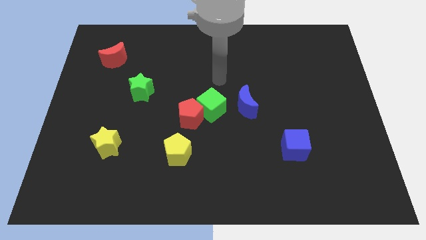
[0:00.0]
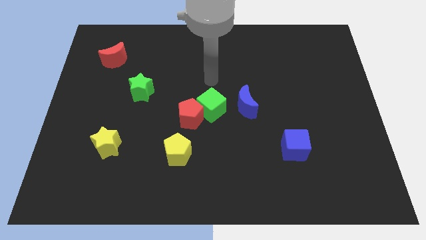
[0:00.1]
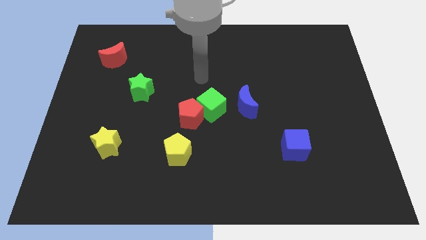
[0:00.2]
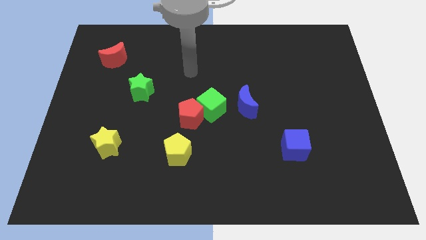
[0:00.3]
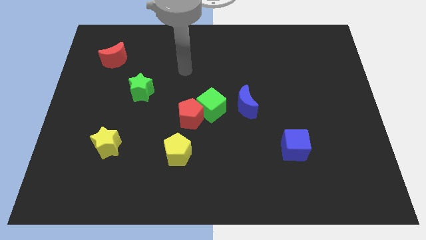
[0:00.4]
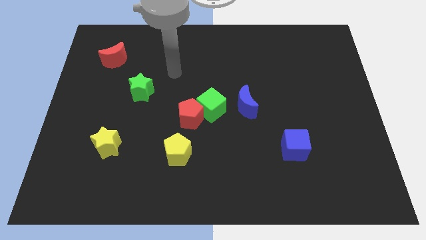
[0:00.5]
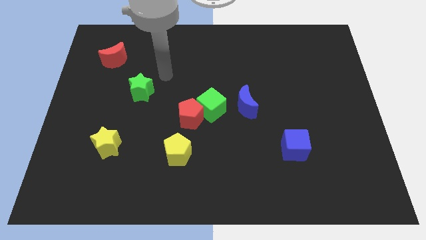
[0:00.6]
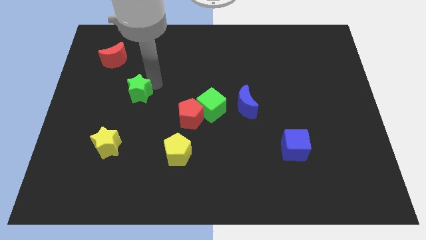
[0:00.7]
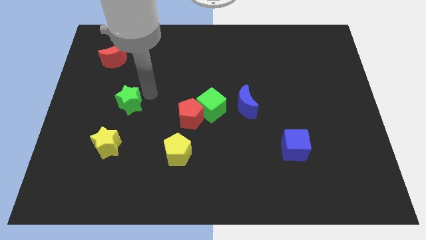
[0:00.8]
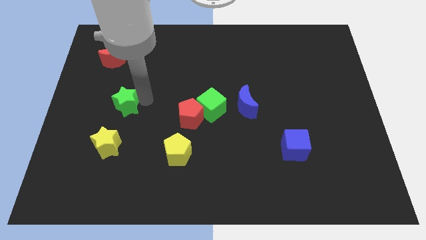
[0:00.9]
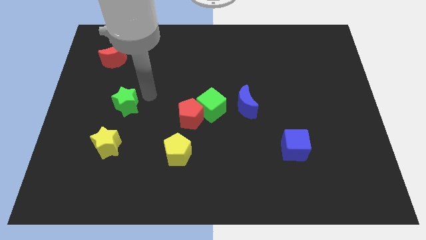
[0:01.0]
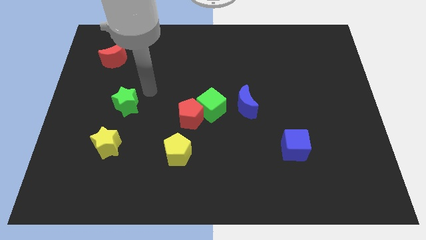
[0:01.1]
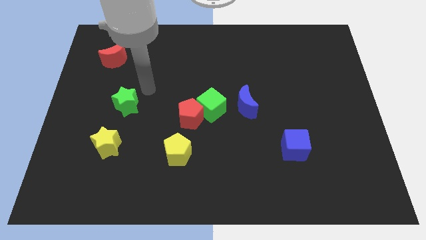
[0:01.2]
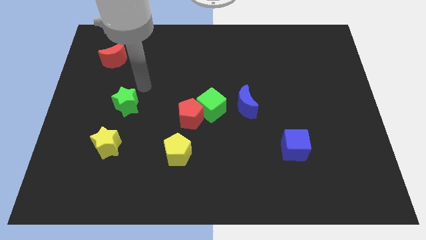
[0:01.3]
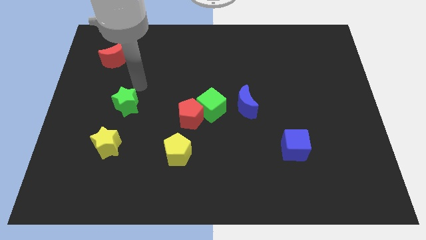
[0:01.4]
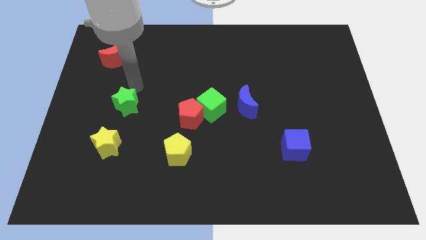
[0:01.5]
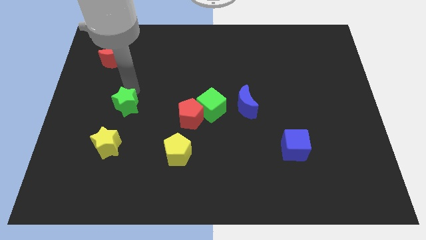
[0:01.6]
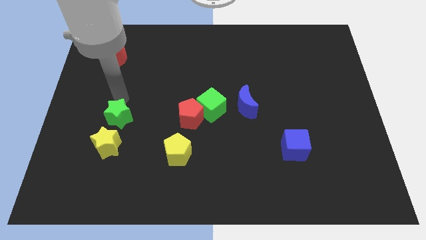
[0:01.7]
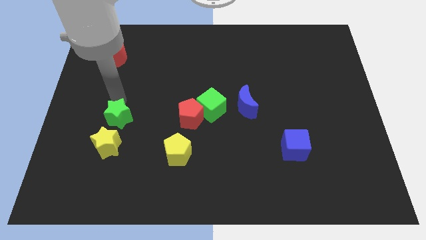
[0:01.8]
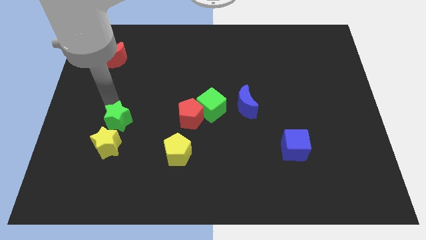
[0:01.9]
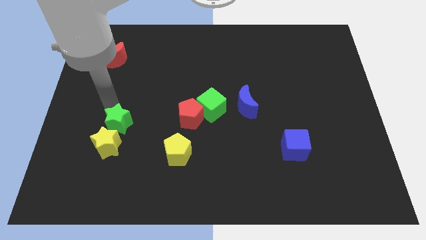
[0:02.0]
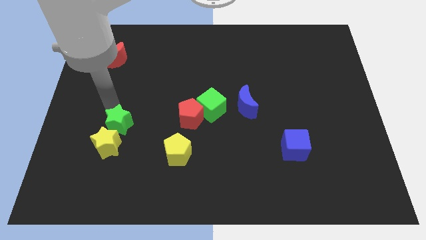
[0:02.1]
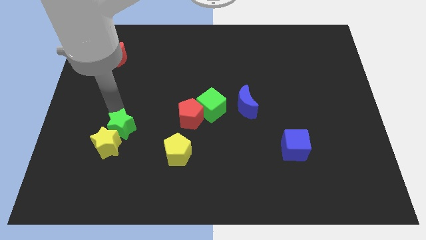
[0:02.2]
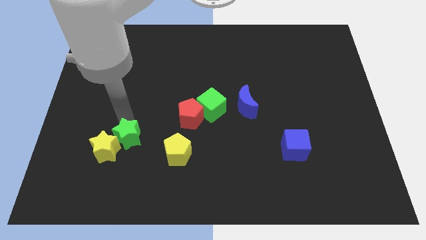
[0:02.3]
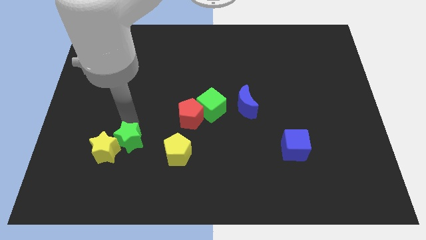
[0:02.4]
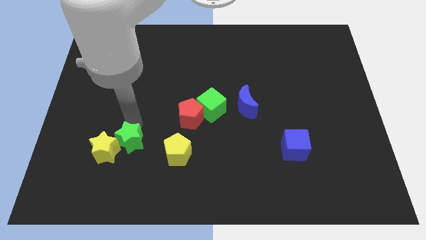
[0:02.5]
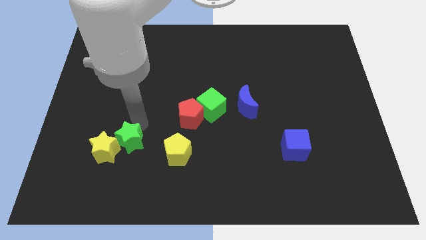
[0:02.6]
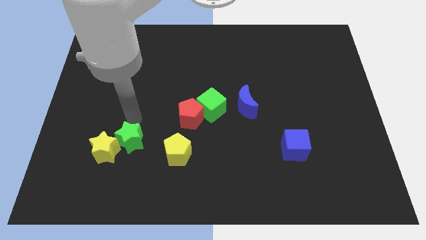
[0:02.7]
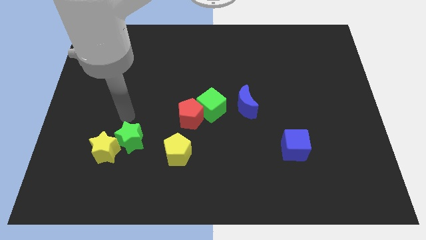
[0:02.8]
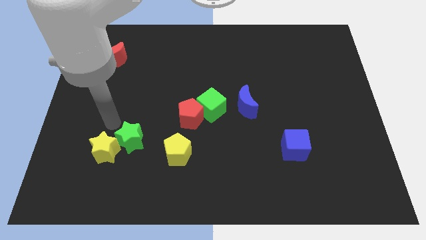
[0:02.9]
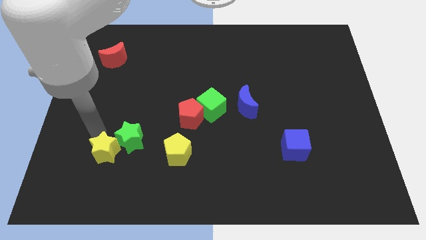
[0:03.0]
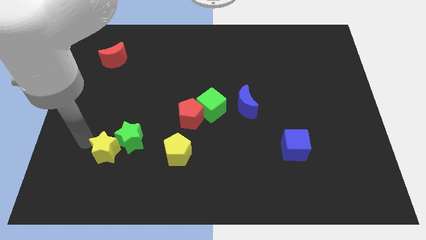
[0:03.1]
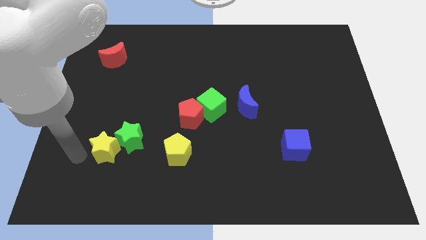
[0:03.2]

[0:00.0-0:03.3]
push green star to the right side of the yellow star

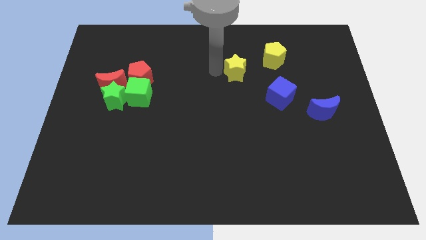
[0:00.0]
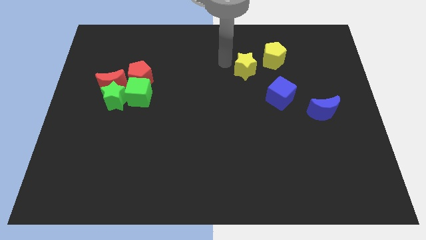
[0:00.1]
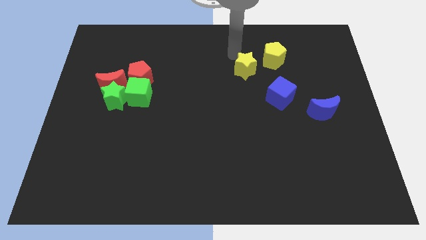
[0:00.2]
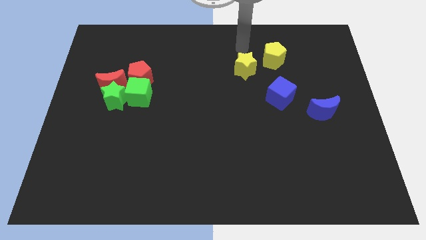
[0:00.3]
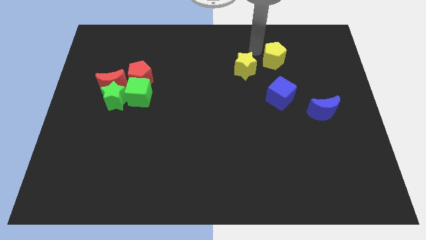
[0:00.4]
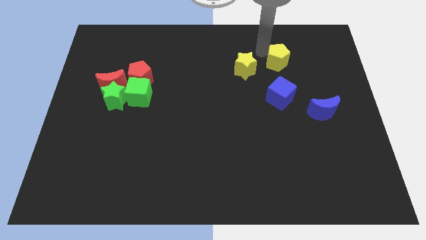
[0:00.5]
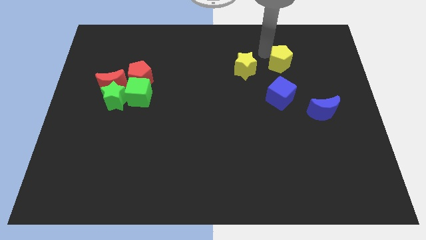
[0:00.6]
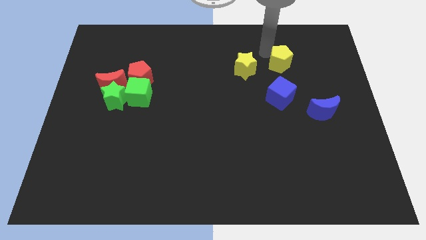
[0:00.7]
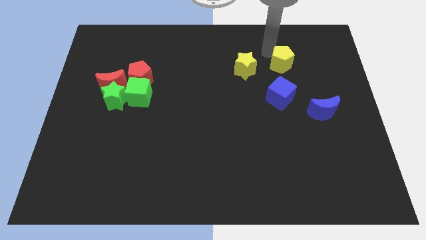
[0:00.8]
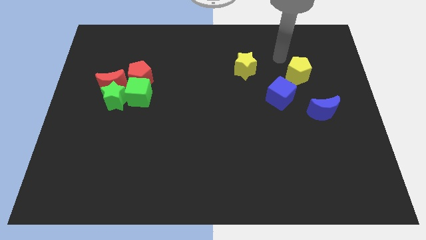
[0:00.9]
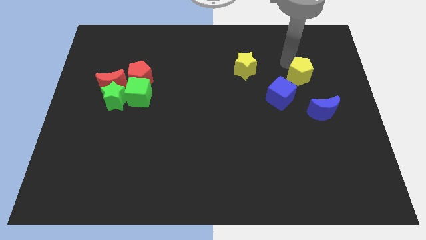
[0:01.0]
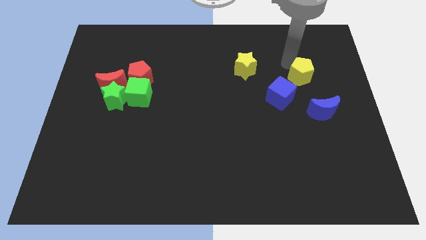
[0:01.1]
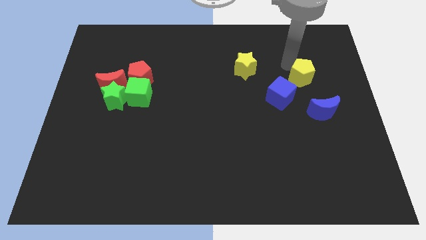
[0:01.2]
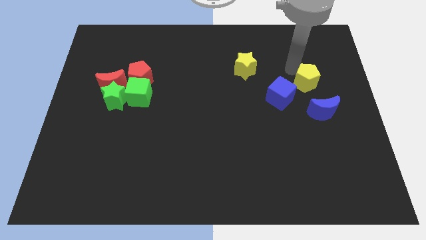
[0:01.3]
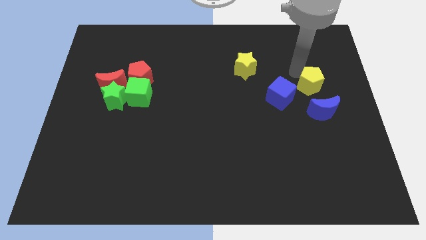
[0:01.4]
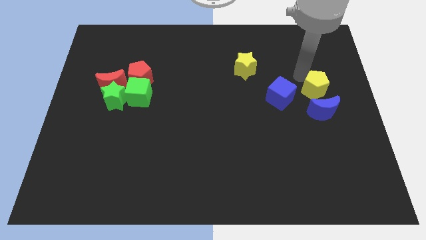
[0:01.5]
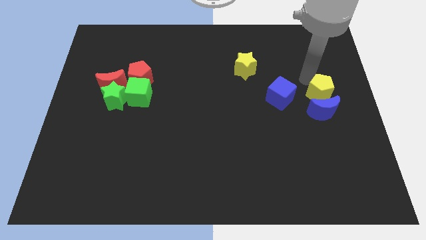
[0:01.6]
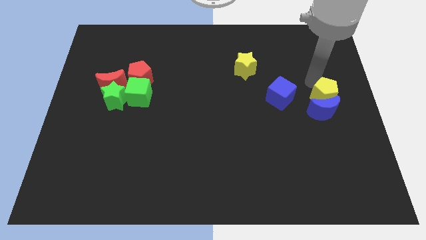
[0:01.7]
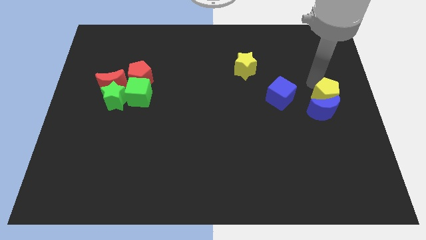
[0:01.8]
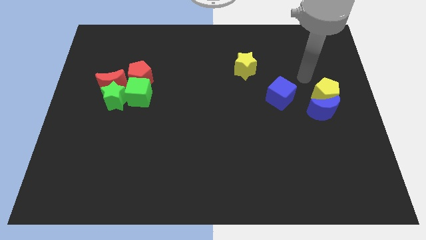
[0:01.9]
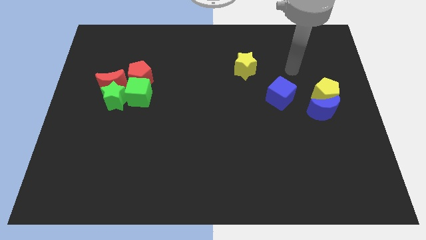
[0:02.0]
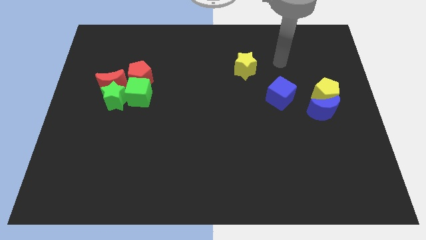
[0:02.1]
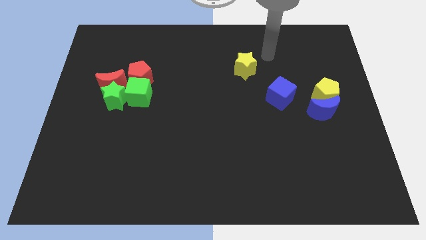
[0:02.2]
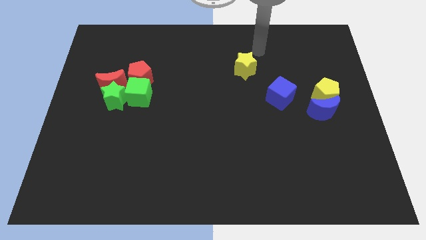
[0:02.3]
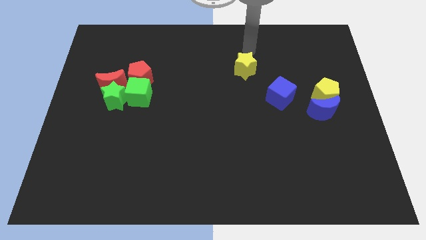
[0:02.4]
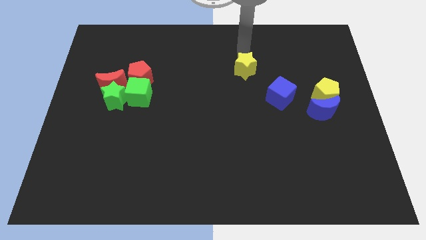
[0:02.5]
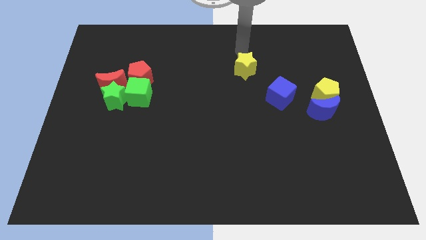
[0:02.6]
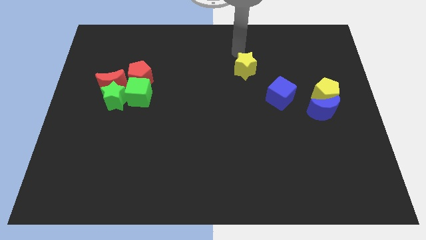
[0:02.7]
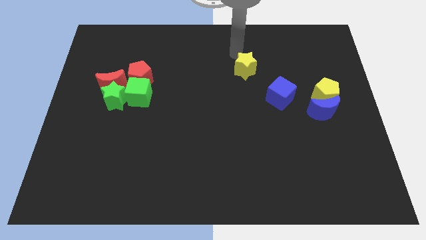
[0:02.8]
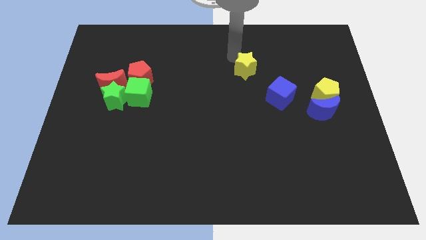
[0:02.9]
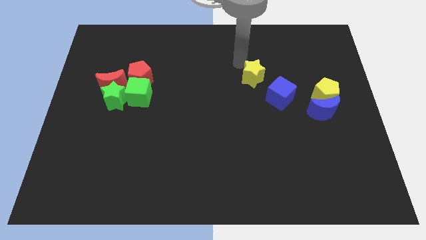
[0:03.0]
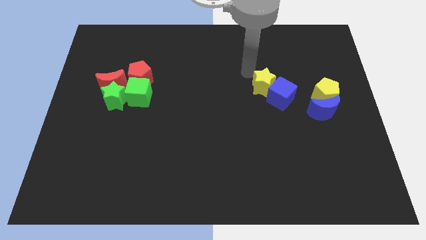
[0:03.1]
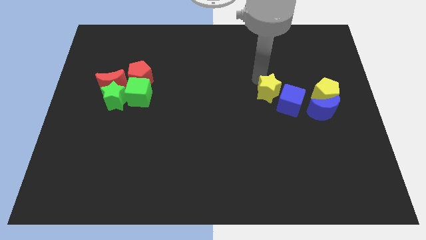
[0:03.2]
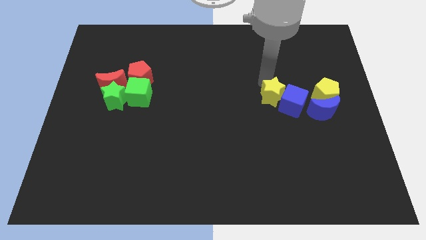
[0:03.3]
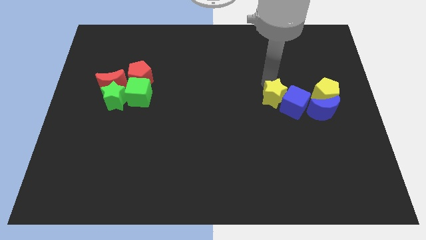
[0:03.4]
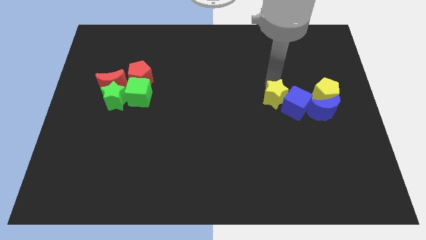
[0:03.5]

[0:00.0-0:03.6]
move yellow blocks into blue blocks

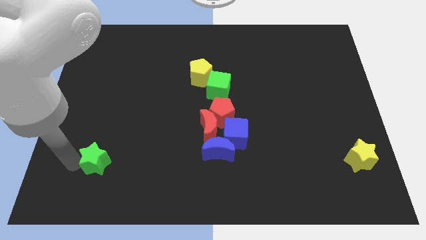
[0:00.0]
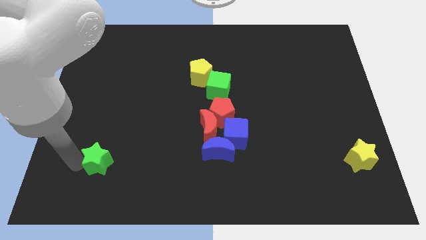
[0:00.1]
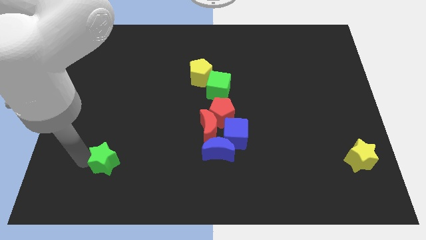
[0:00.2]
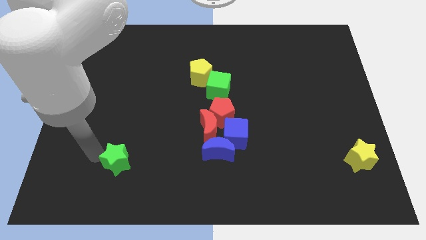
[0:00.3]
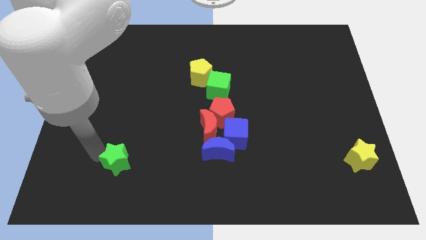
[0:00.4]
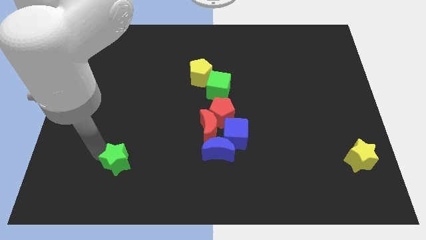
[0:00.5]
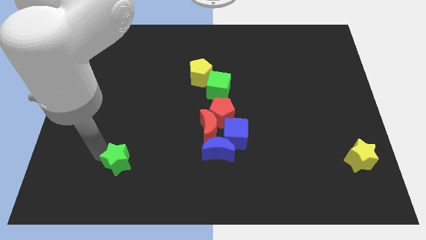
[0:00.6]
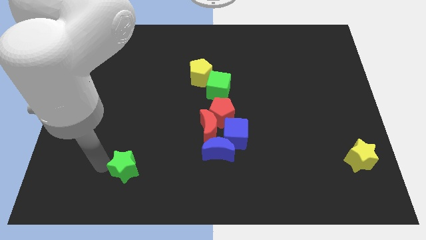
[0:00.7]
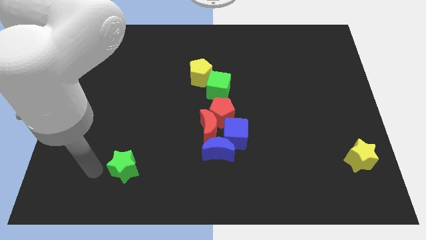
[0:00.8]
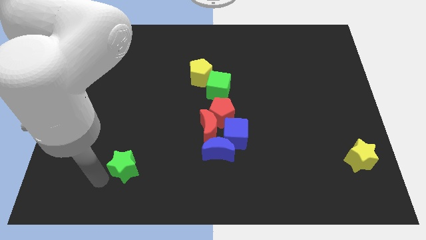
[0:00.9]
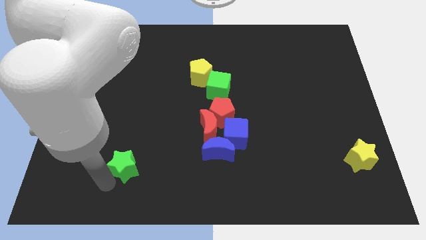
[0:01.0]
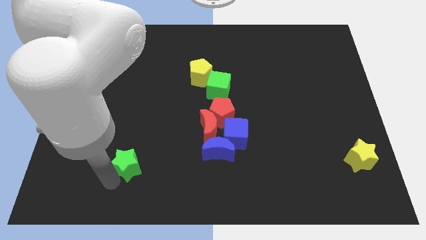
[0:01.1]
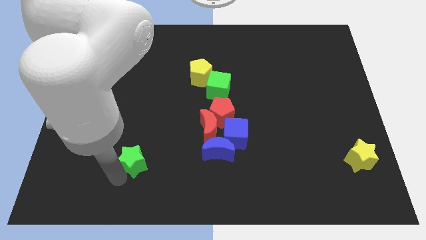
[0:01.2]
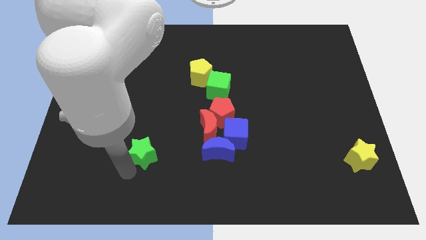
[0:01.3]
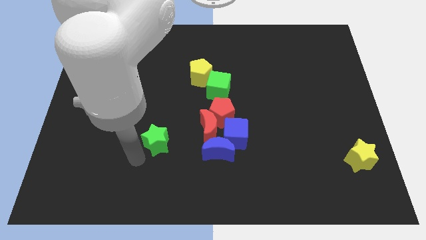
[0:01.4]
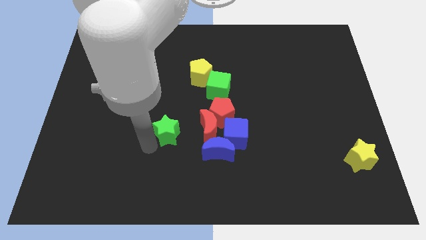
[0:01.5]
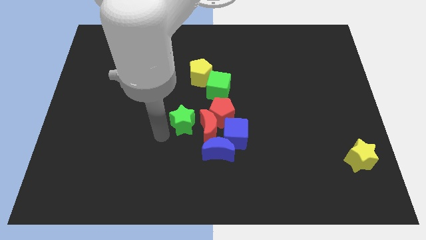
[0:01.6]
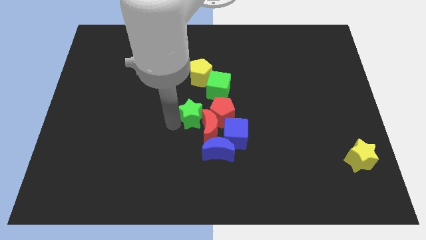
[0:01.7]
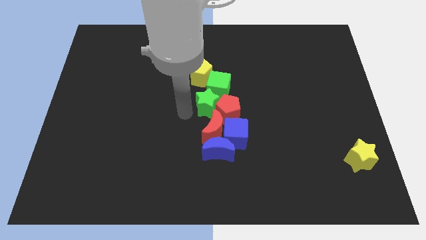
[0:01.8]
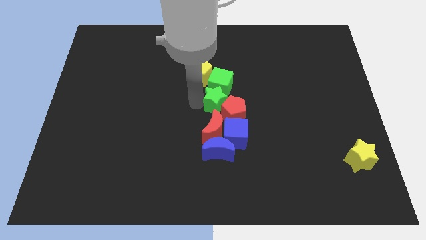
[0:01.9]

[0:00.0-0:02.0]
place the green star at the center of the board
